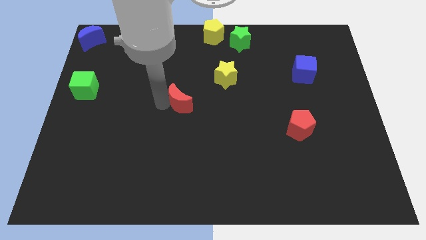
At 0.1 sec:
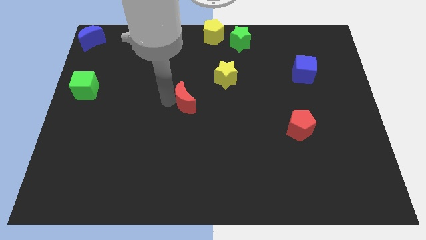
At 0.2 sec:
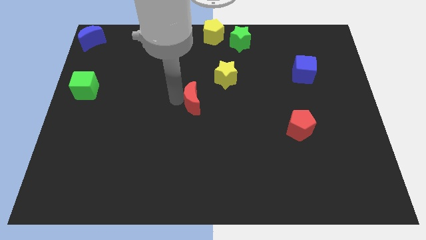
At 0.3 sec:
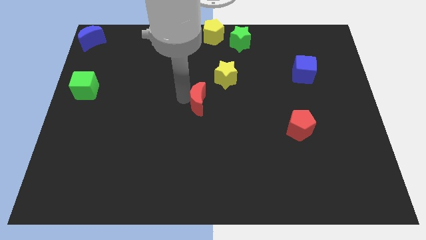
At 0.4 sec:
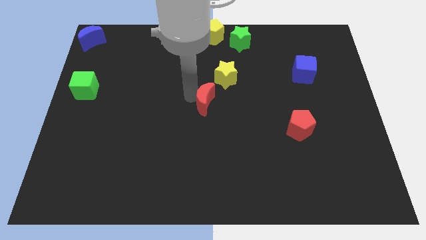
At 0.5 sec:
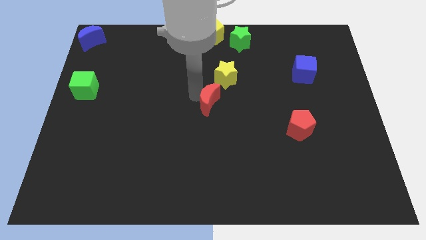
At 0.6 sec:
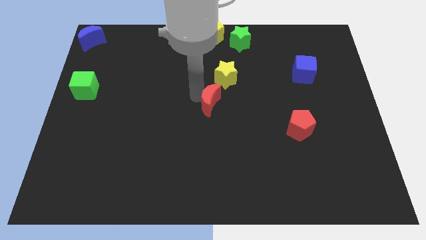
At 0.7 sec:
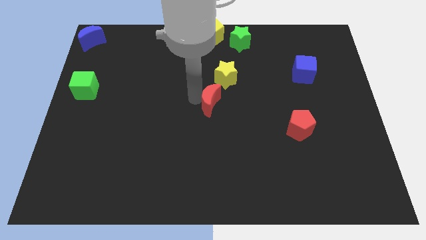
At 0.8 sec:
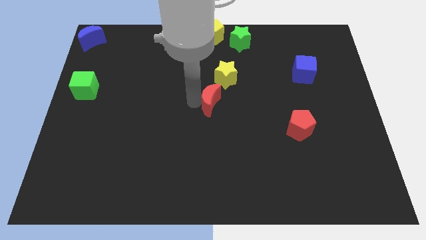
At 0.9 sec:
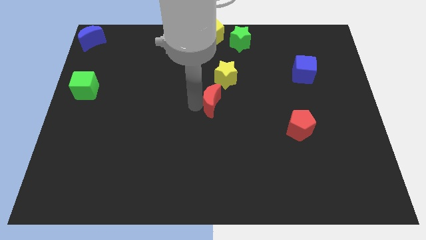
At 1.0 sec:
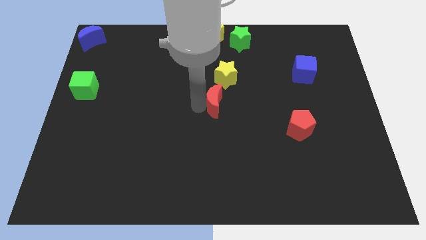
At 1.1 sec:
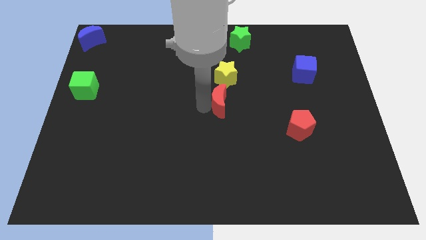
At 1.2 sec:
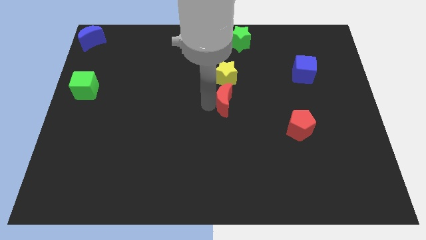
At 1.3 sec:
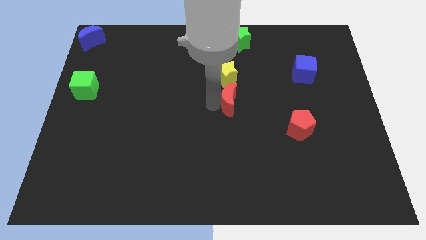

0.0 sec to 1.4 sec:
place the red moon vertically below the yellow star

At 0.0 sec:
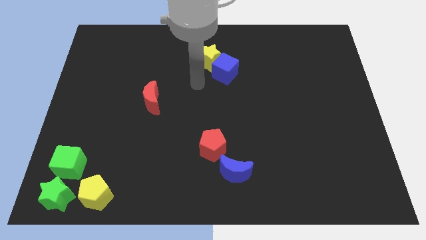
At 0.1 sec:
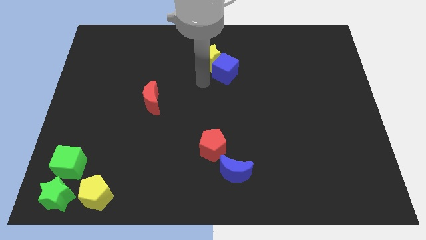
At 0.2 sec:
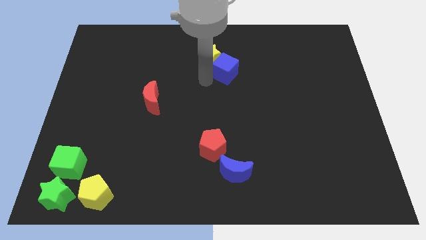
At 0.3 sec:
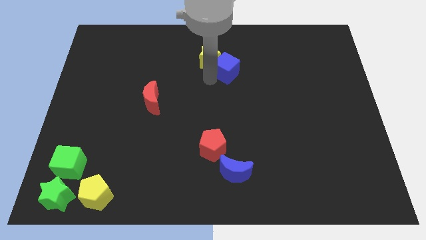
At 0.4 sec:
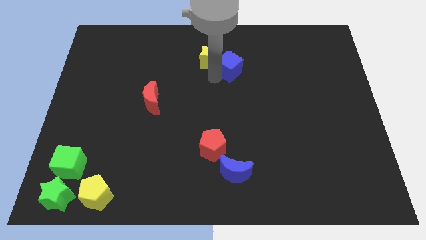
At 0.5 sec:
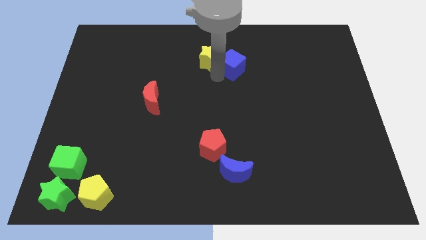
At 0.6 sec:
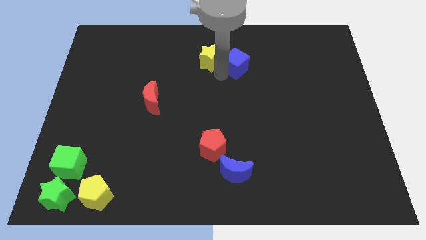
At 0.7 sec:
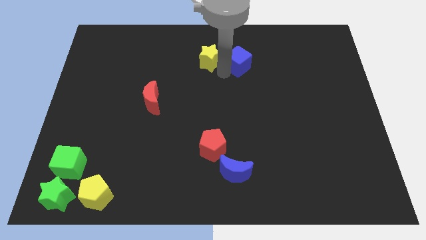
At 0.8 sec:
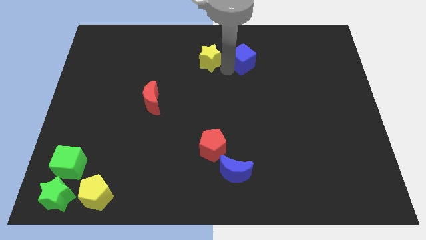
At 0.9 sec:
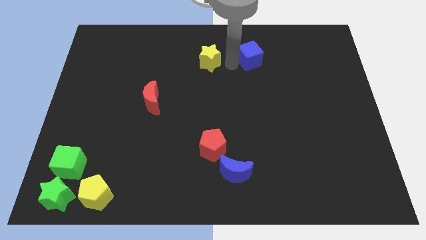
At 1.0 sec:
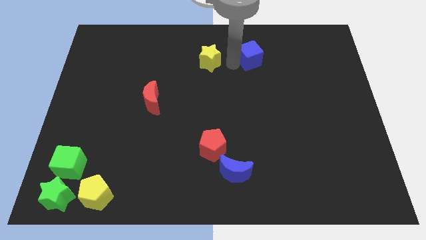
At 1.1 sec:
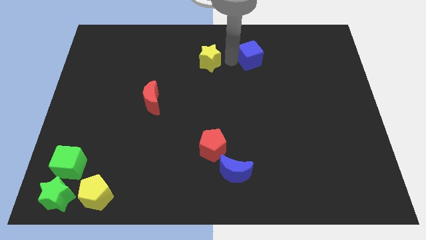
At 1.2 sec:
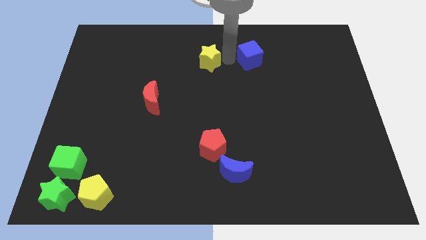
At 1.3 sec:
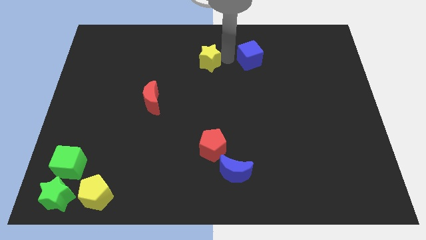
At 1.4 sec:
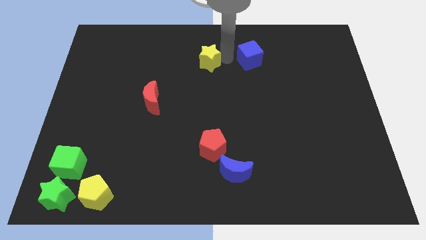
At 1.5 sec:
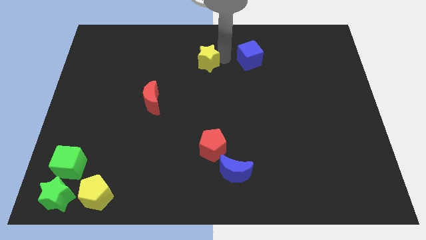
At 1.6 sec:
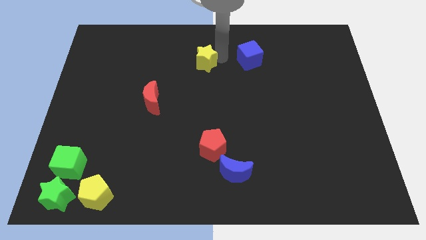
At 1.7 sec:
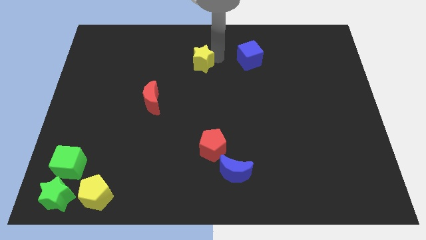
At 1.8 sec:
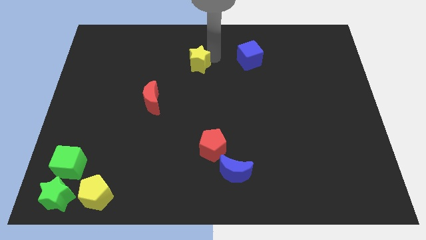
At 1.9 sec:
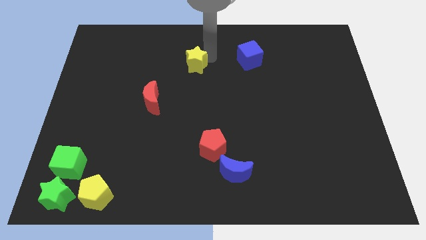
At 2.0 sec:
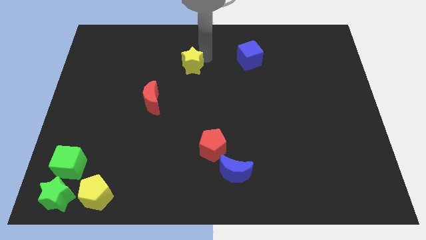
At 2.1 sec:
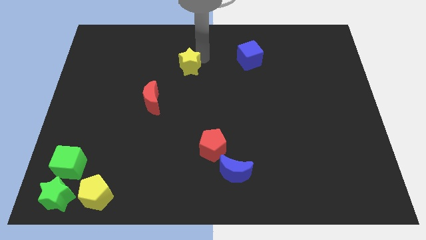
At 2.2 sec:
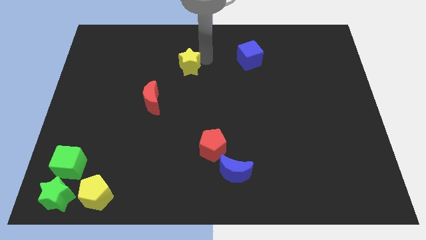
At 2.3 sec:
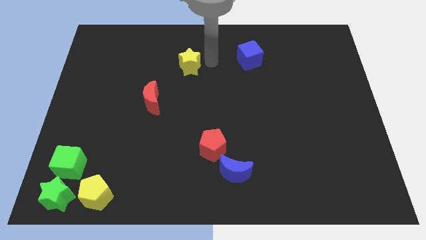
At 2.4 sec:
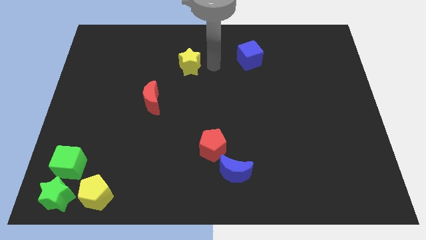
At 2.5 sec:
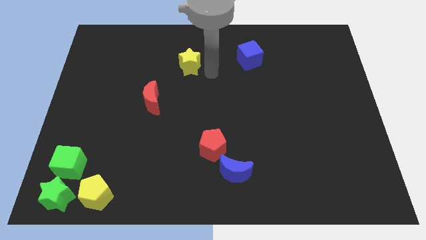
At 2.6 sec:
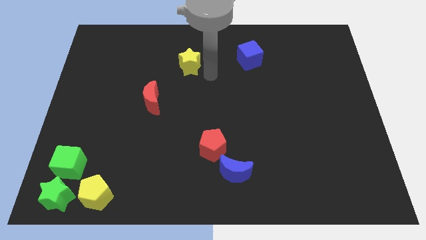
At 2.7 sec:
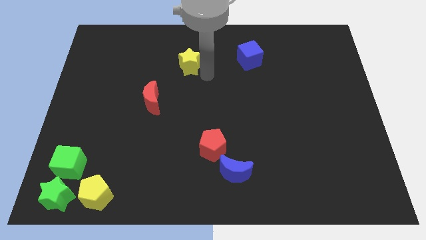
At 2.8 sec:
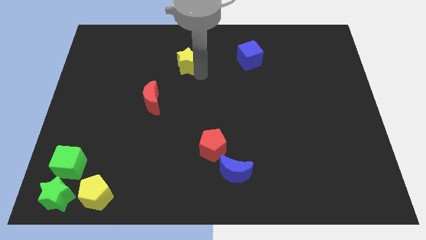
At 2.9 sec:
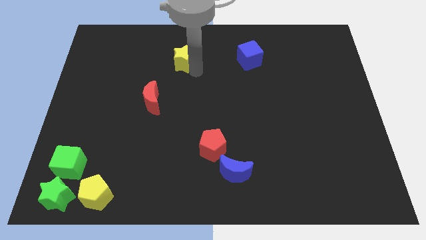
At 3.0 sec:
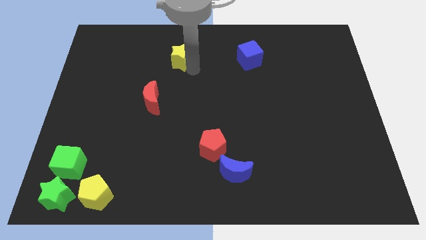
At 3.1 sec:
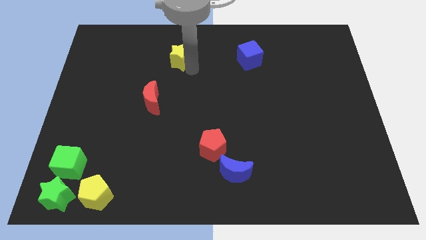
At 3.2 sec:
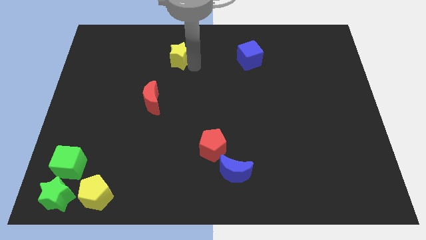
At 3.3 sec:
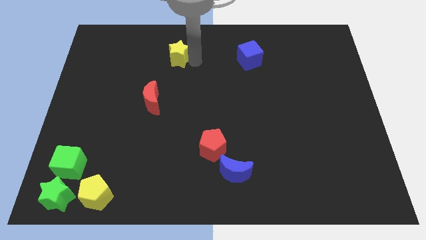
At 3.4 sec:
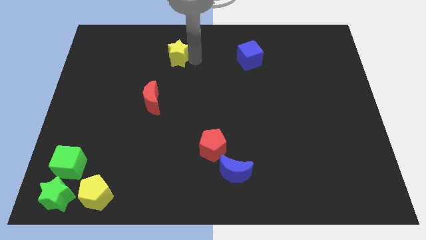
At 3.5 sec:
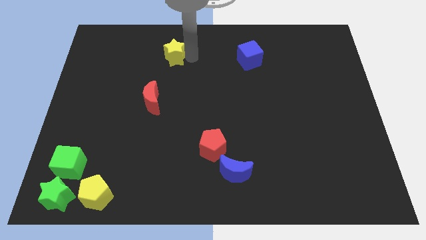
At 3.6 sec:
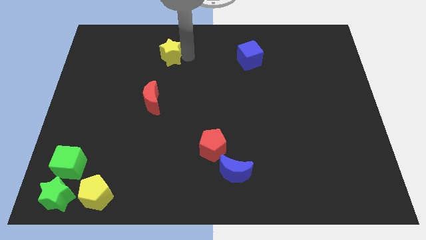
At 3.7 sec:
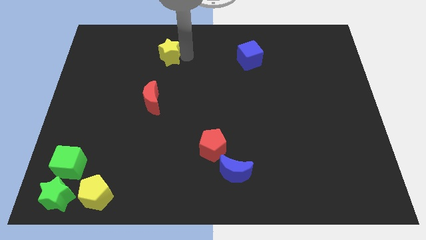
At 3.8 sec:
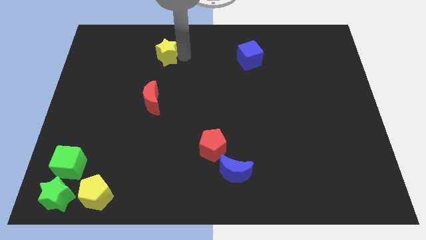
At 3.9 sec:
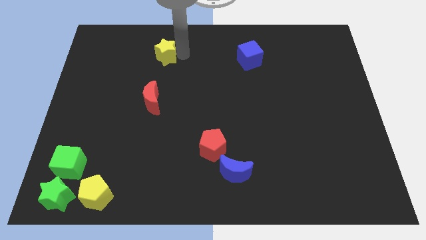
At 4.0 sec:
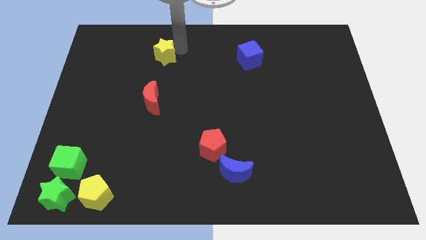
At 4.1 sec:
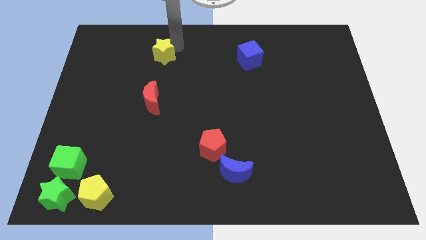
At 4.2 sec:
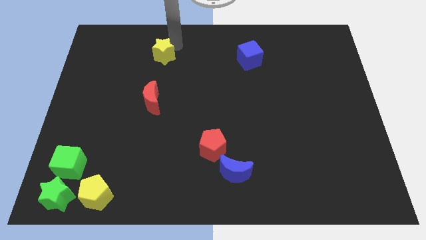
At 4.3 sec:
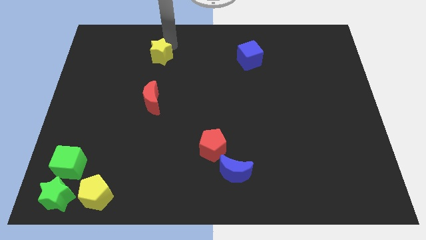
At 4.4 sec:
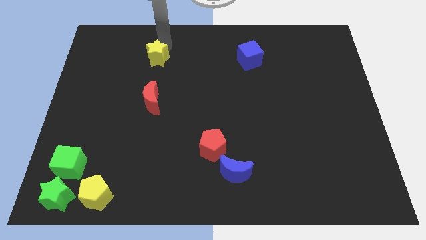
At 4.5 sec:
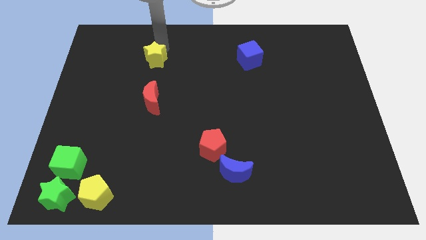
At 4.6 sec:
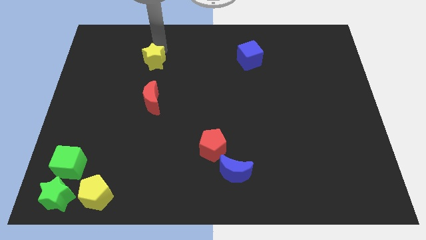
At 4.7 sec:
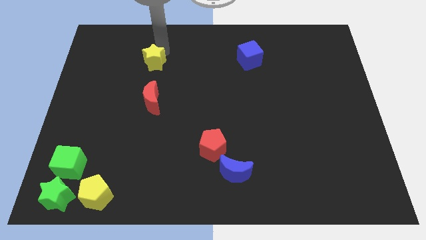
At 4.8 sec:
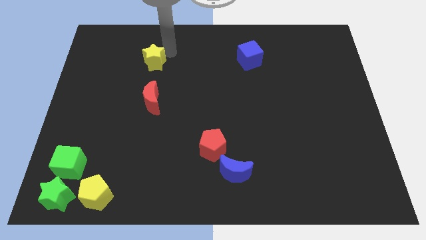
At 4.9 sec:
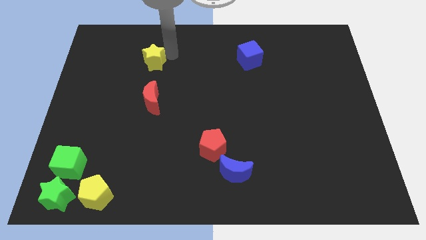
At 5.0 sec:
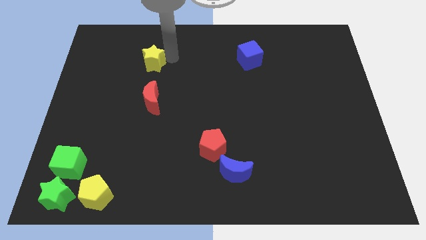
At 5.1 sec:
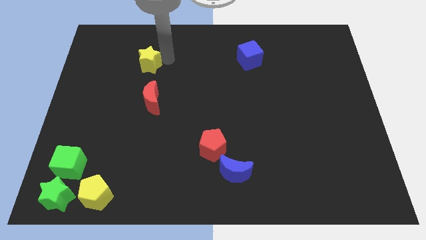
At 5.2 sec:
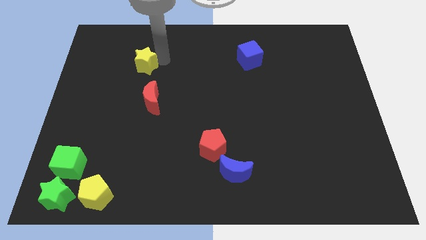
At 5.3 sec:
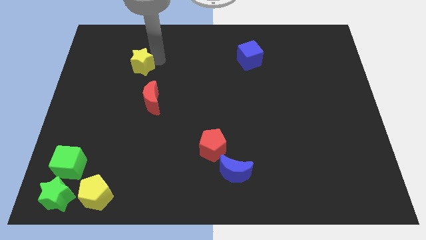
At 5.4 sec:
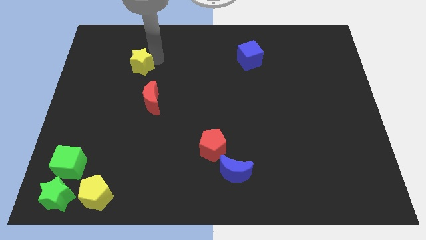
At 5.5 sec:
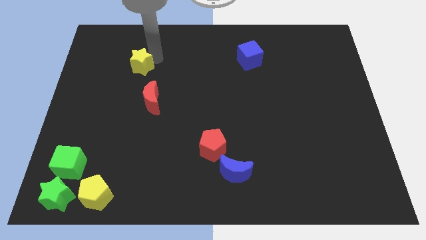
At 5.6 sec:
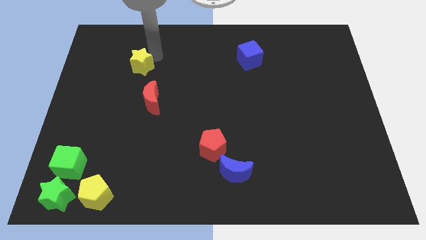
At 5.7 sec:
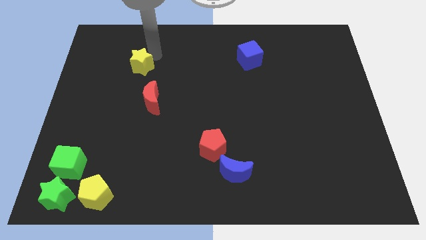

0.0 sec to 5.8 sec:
push blue cube to the center place yellow star towards left center

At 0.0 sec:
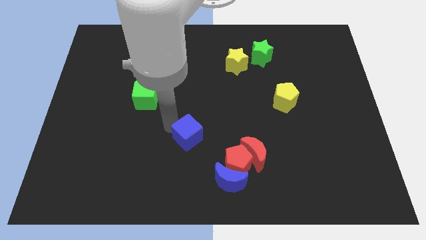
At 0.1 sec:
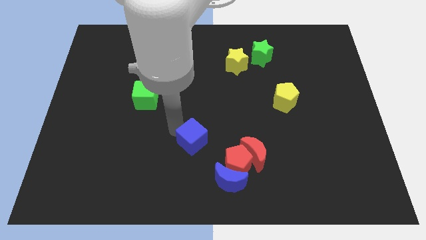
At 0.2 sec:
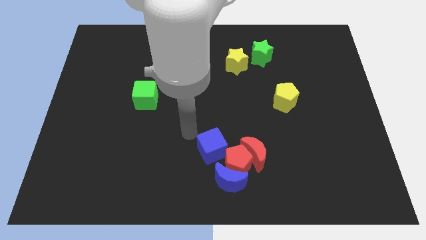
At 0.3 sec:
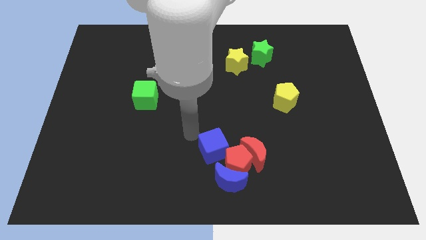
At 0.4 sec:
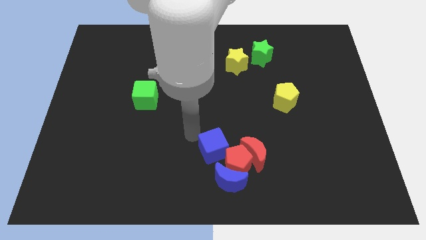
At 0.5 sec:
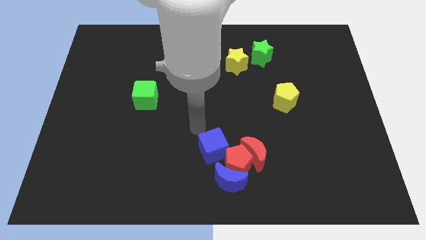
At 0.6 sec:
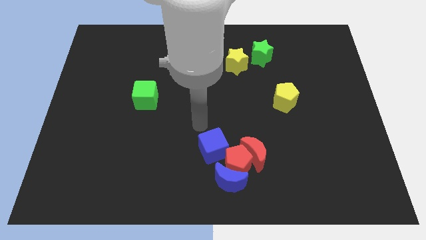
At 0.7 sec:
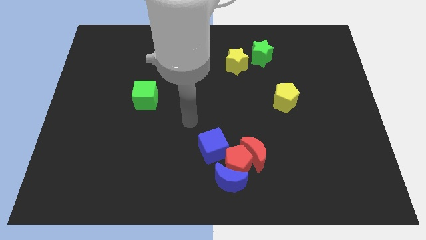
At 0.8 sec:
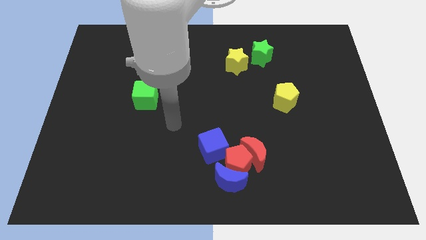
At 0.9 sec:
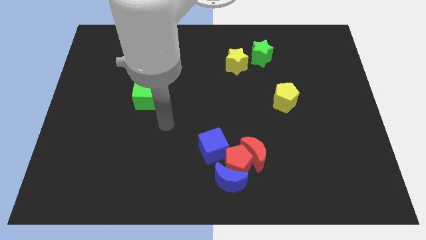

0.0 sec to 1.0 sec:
place the blue cube towards the top left side of the red pentagon

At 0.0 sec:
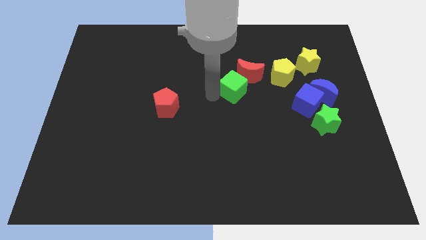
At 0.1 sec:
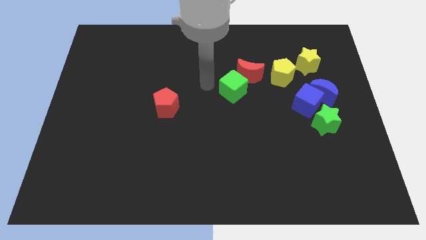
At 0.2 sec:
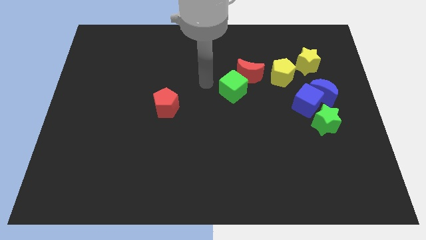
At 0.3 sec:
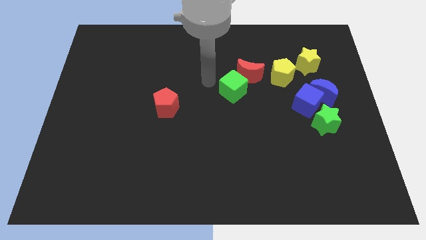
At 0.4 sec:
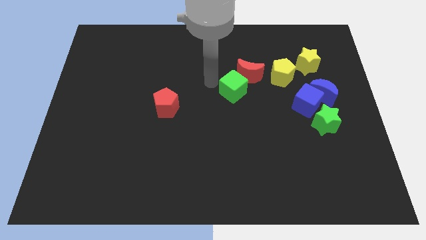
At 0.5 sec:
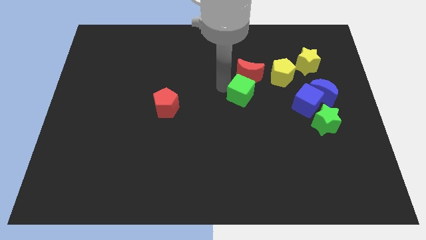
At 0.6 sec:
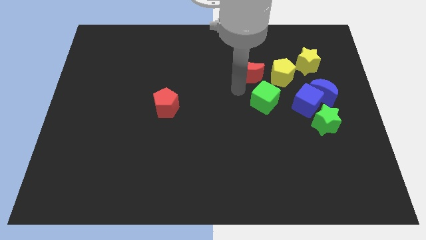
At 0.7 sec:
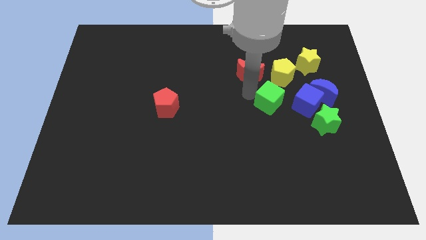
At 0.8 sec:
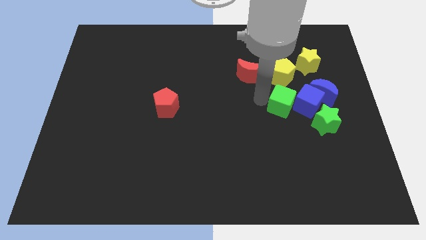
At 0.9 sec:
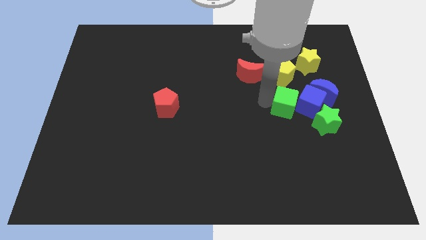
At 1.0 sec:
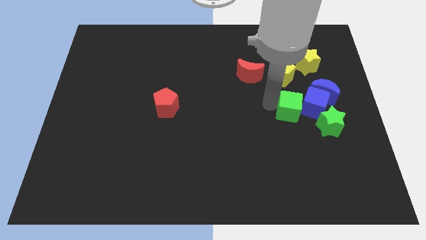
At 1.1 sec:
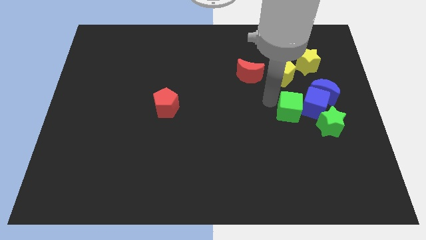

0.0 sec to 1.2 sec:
push green cube in to blue cube
